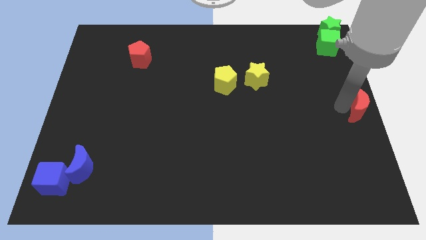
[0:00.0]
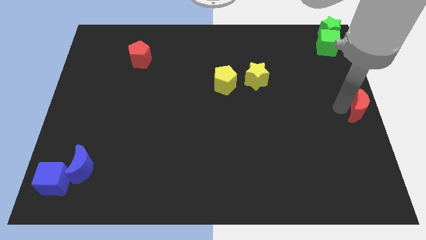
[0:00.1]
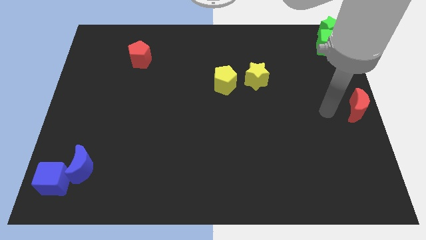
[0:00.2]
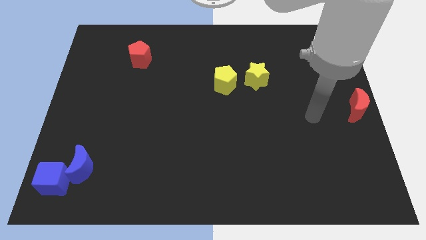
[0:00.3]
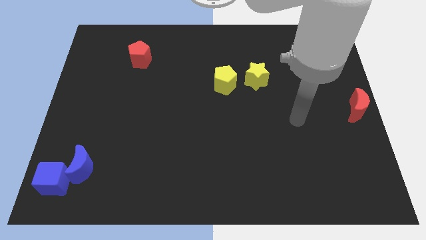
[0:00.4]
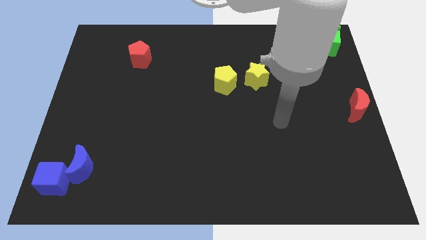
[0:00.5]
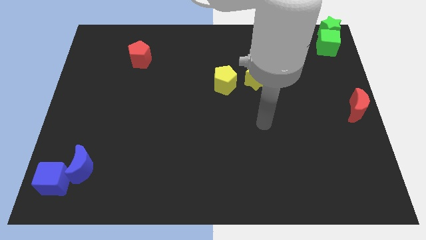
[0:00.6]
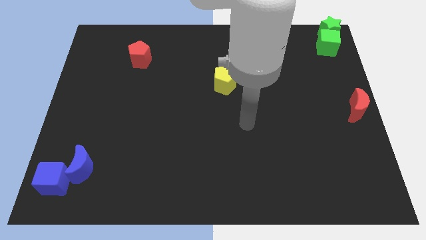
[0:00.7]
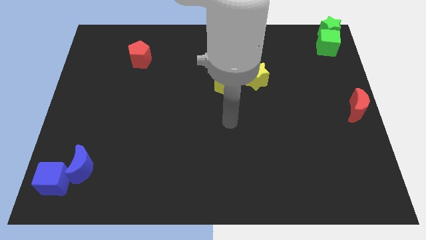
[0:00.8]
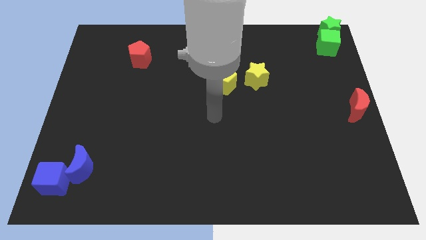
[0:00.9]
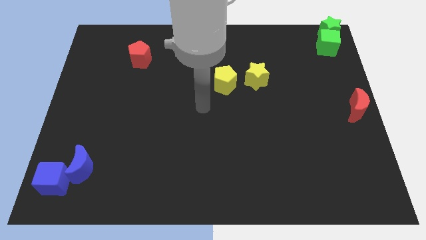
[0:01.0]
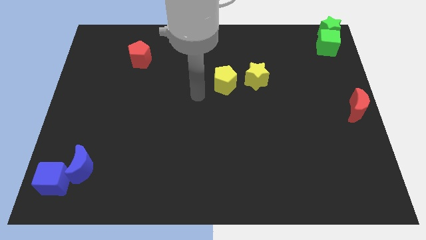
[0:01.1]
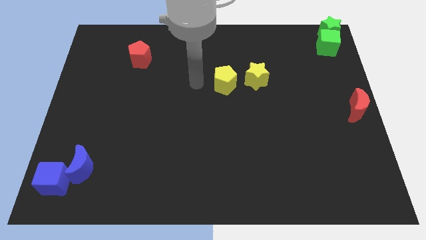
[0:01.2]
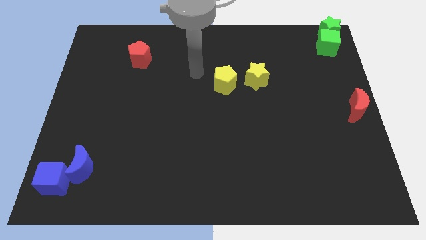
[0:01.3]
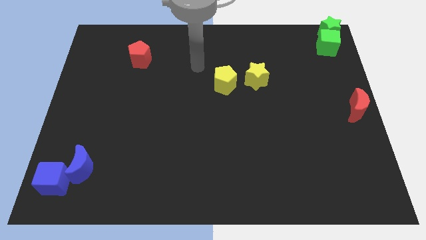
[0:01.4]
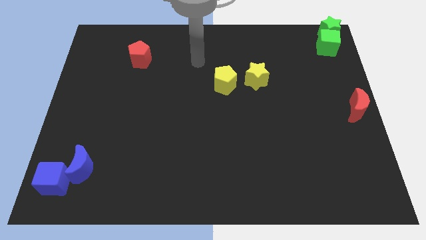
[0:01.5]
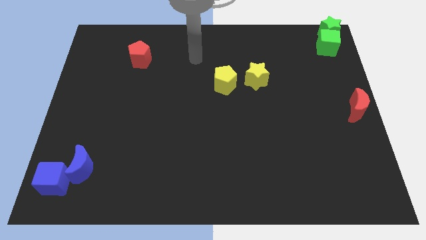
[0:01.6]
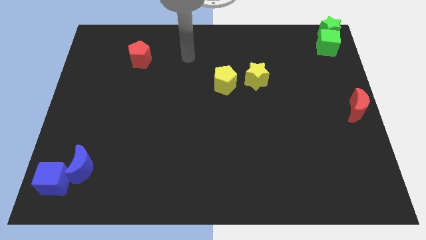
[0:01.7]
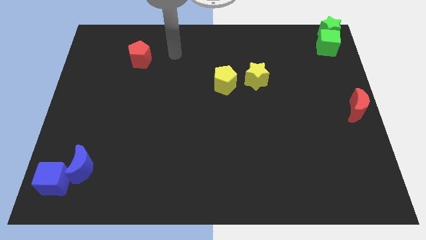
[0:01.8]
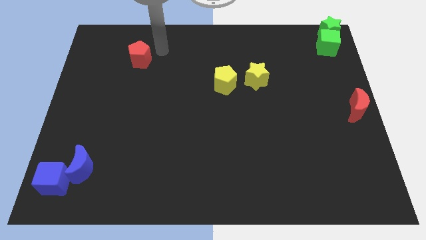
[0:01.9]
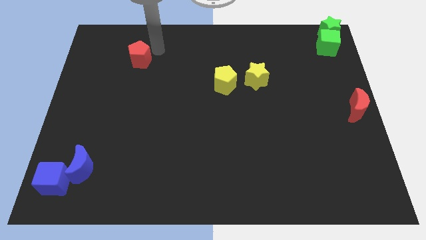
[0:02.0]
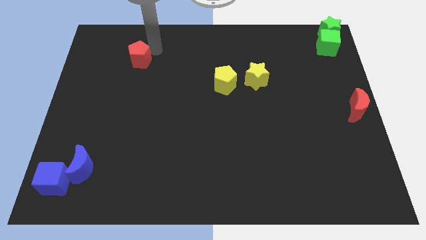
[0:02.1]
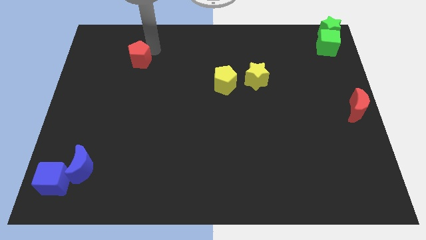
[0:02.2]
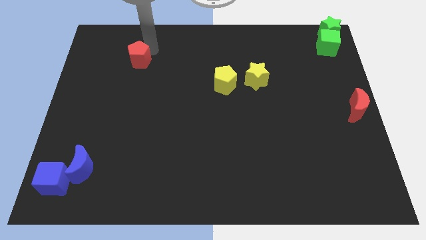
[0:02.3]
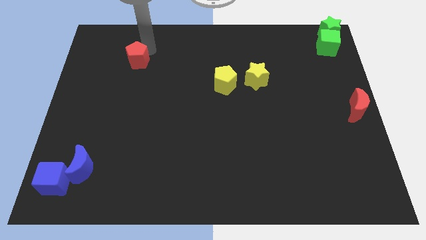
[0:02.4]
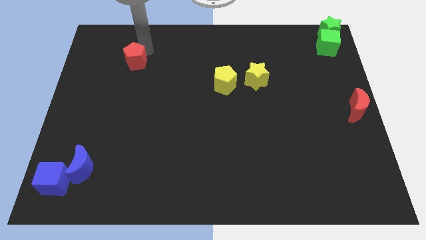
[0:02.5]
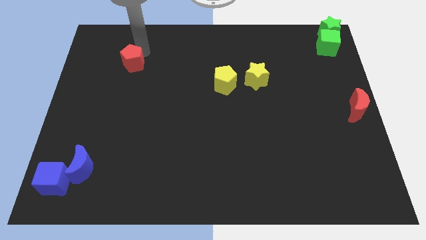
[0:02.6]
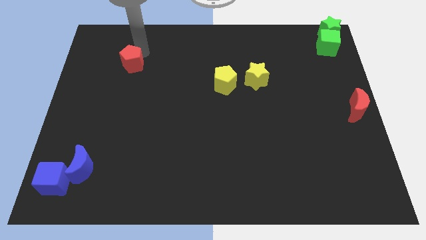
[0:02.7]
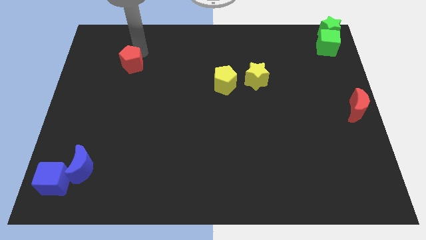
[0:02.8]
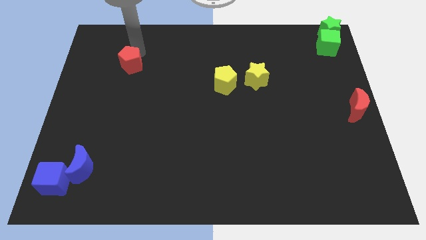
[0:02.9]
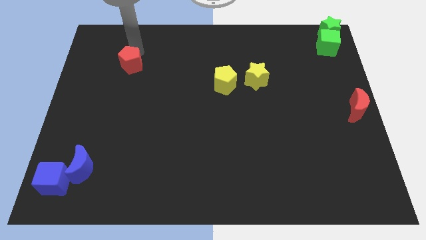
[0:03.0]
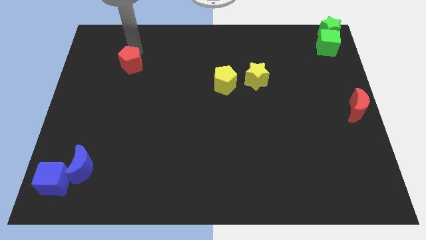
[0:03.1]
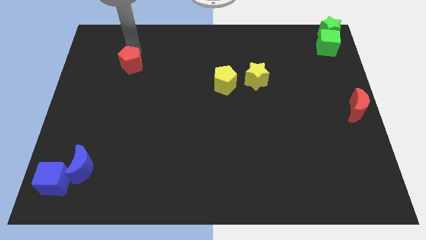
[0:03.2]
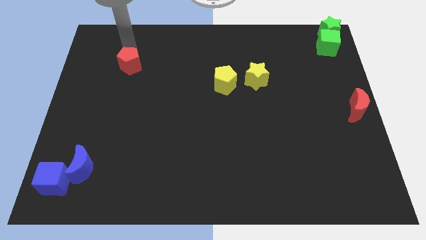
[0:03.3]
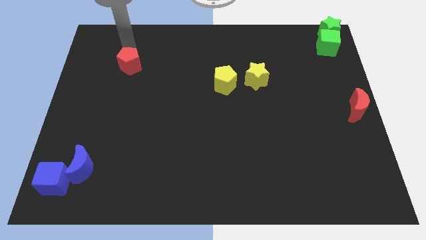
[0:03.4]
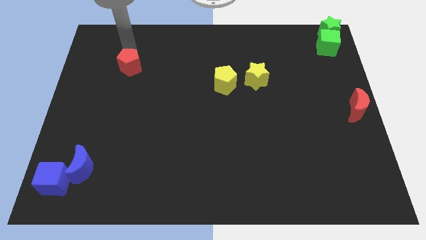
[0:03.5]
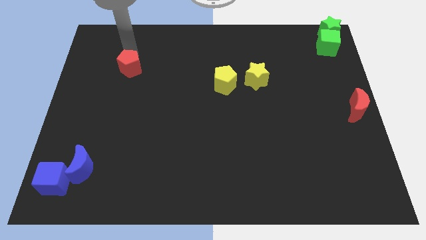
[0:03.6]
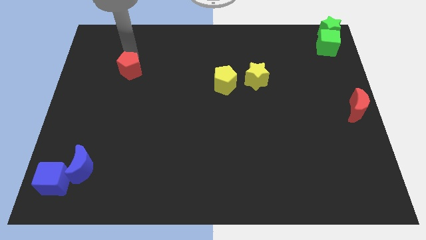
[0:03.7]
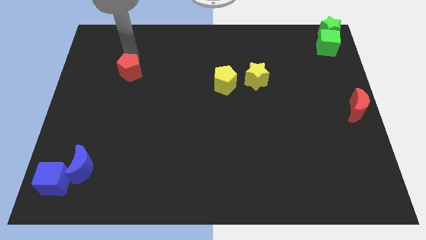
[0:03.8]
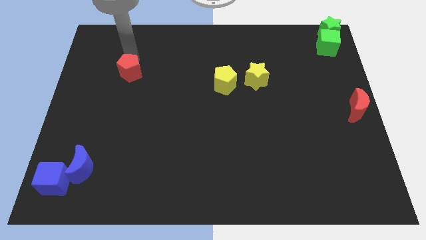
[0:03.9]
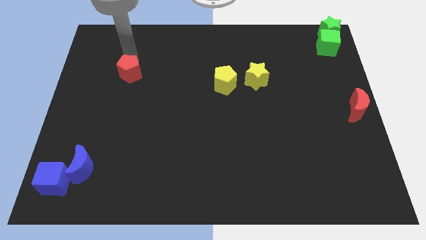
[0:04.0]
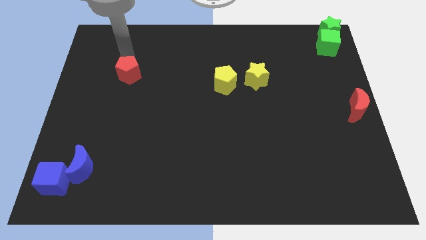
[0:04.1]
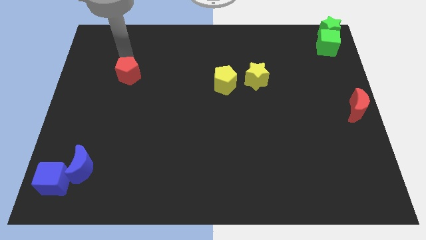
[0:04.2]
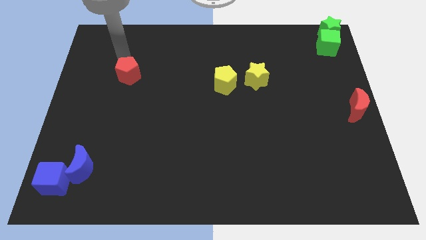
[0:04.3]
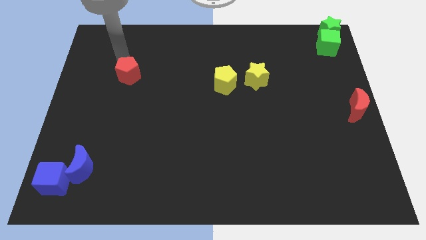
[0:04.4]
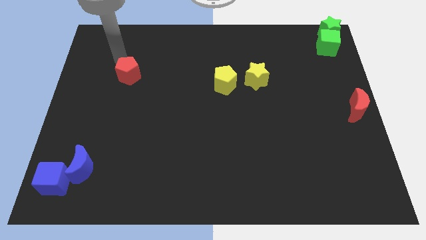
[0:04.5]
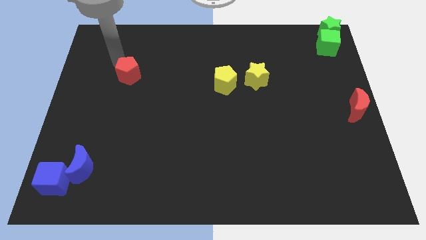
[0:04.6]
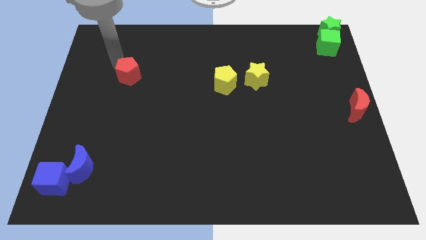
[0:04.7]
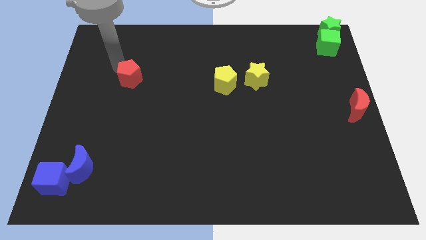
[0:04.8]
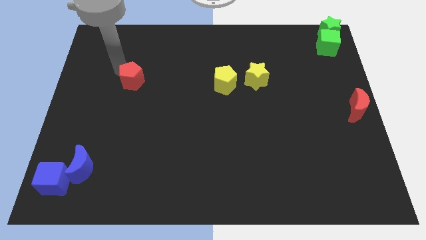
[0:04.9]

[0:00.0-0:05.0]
push the red pentagon towards the bottom side of the board

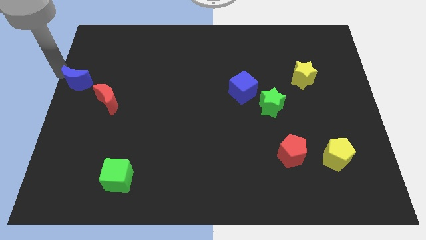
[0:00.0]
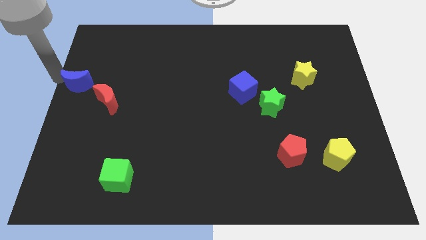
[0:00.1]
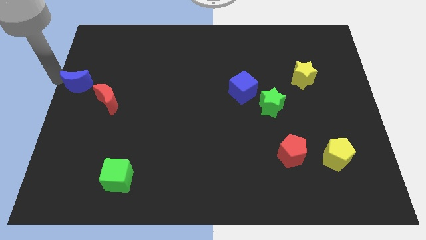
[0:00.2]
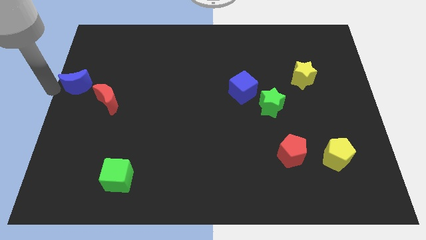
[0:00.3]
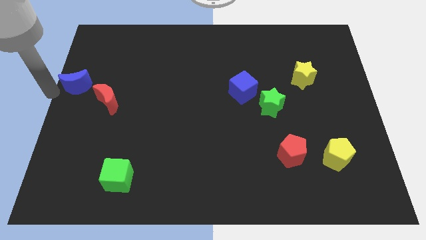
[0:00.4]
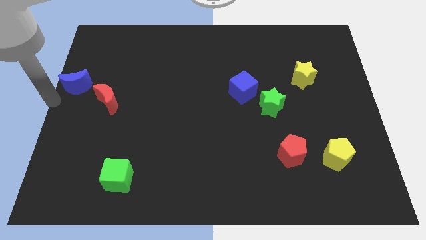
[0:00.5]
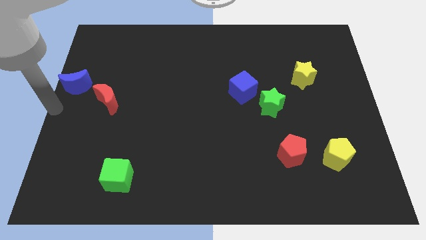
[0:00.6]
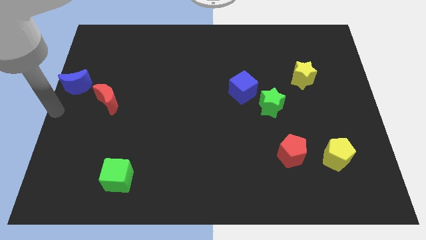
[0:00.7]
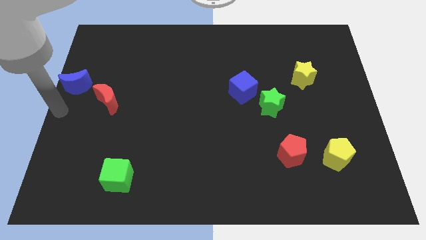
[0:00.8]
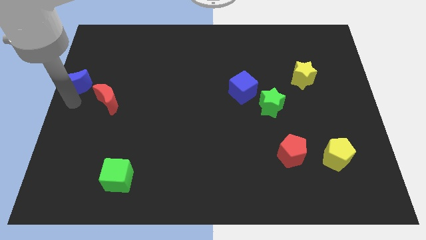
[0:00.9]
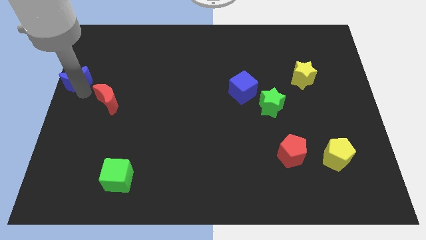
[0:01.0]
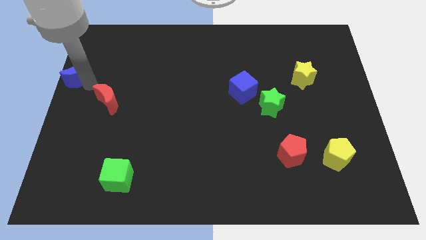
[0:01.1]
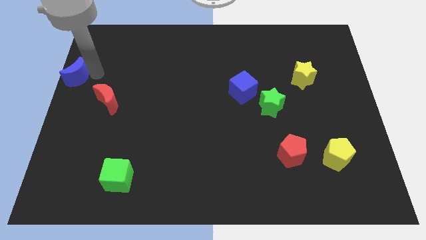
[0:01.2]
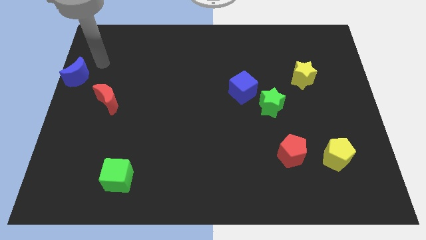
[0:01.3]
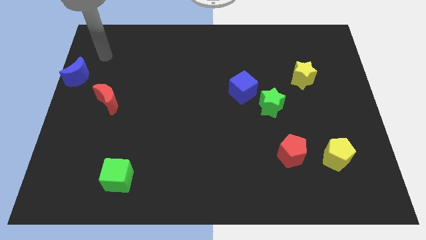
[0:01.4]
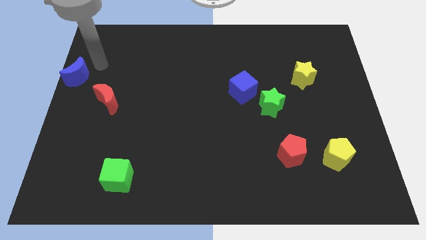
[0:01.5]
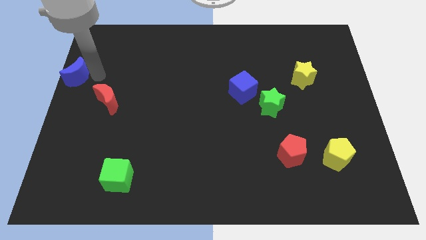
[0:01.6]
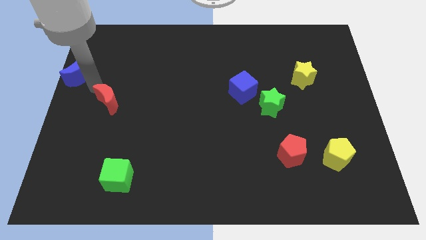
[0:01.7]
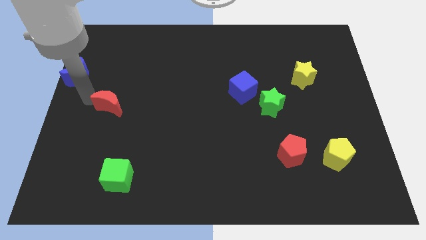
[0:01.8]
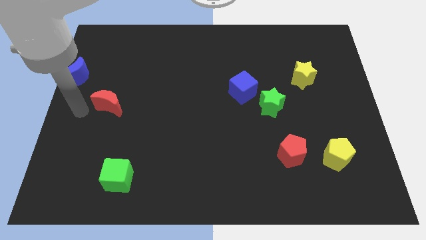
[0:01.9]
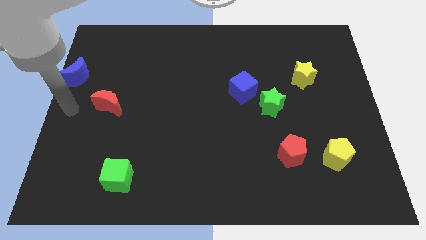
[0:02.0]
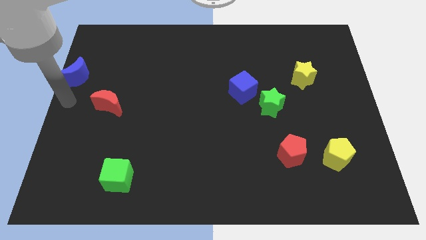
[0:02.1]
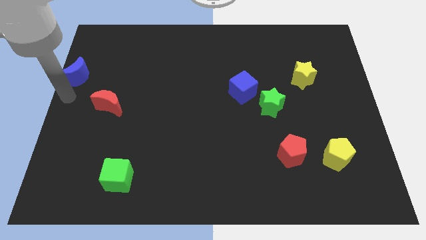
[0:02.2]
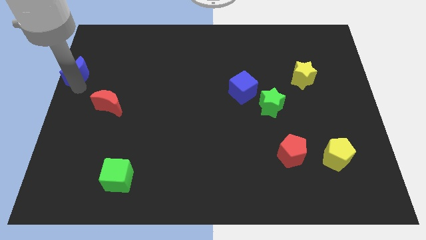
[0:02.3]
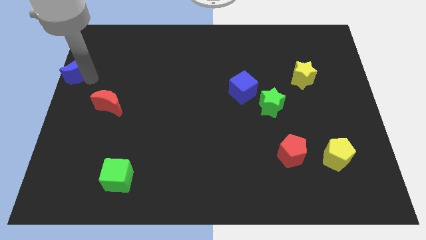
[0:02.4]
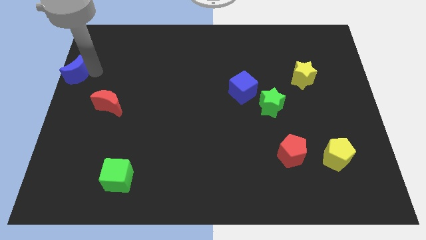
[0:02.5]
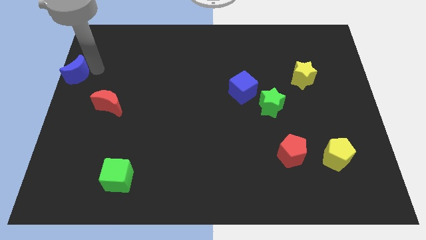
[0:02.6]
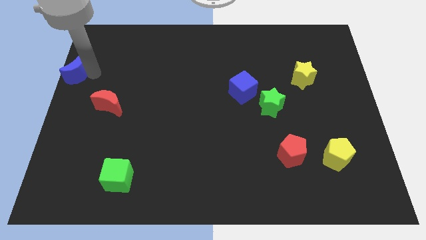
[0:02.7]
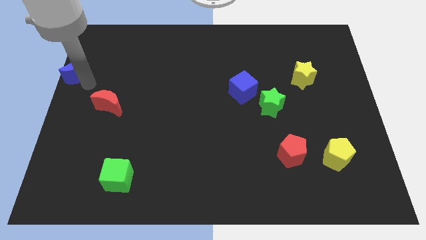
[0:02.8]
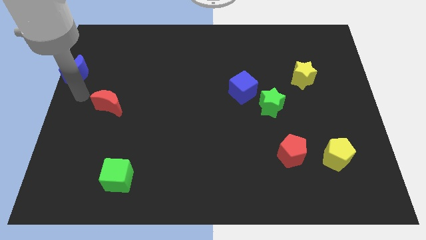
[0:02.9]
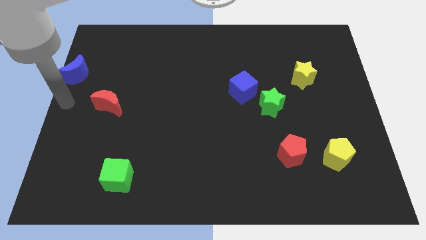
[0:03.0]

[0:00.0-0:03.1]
separate blue and red moons

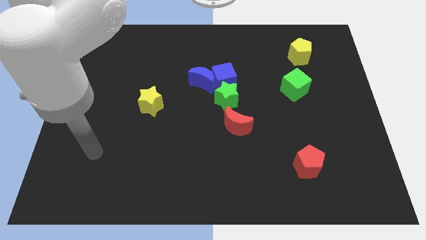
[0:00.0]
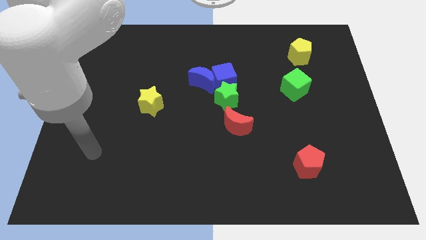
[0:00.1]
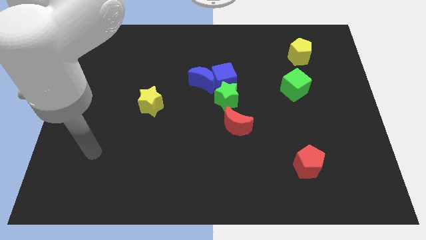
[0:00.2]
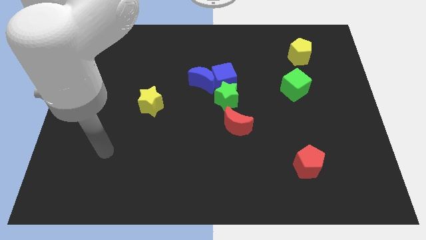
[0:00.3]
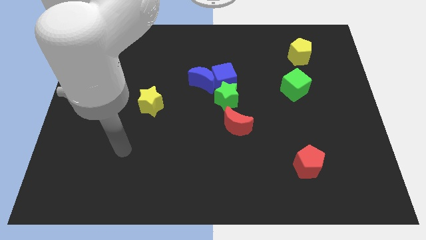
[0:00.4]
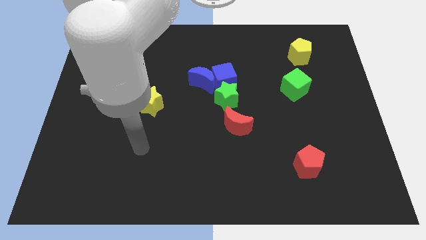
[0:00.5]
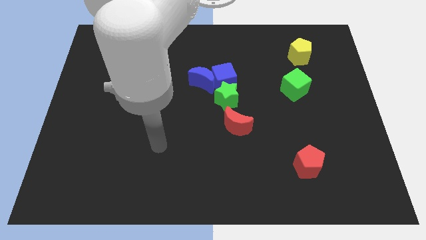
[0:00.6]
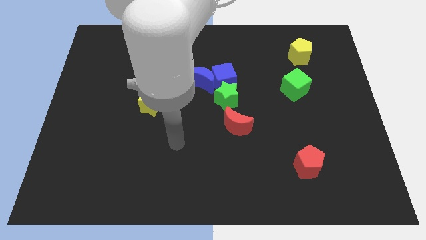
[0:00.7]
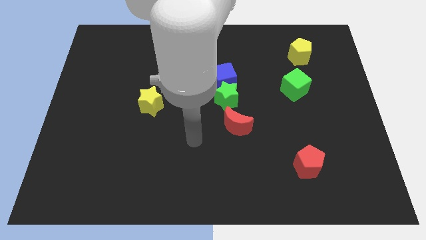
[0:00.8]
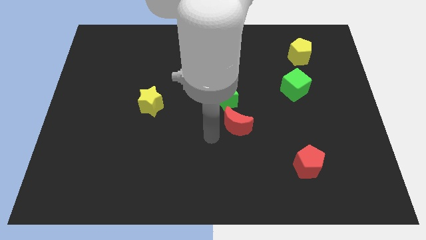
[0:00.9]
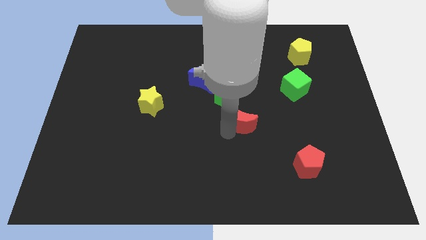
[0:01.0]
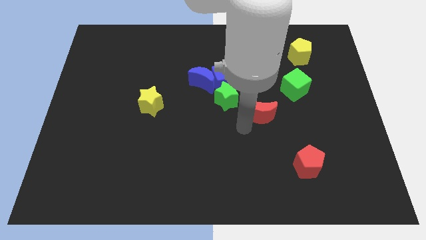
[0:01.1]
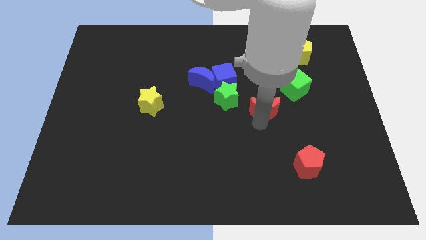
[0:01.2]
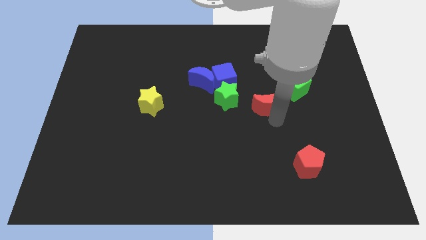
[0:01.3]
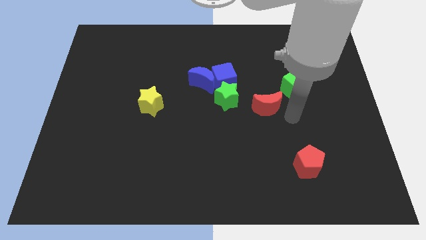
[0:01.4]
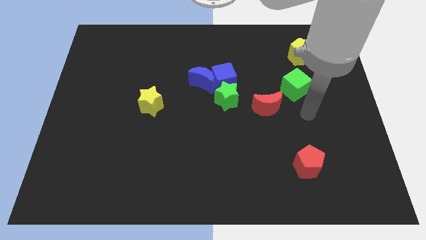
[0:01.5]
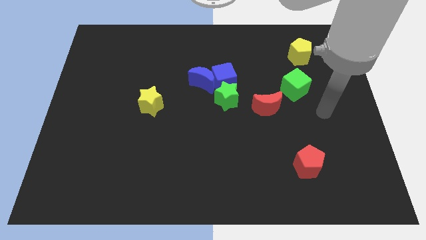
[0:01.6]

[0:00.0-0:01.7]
move the red crescent to the bottom right of the green star
